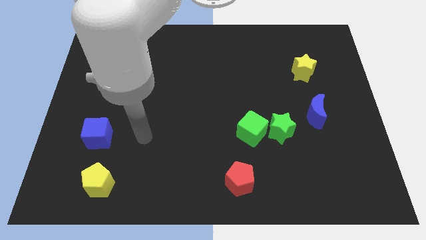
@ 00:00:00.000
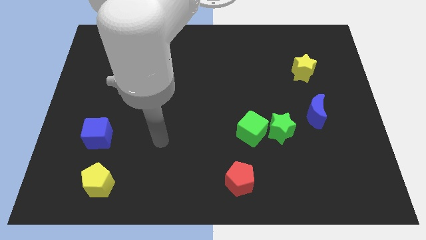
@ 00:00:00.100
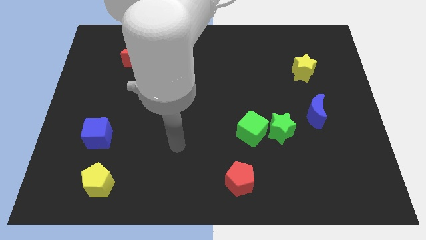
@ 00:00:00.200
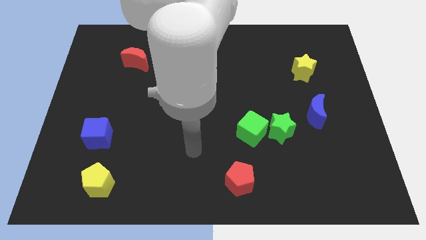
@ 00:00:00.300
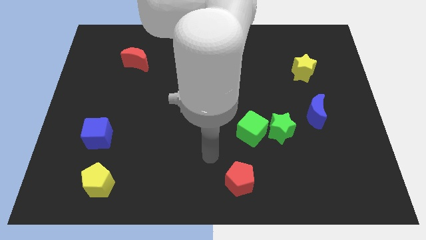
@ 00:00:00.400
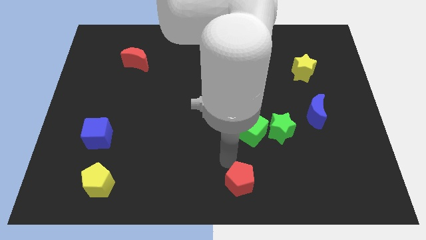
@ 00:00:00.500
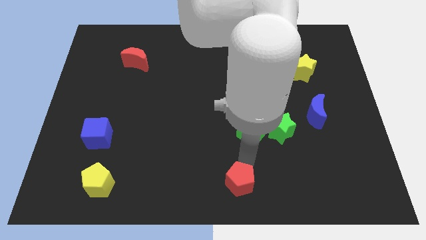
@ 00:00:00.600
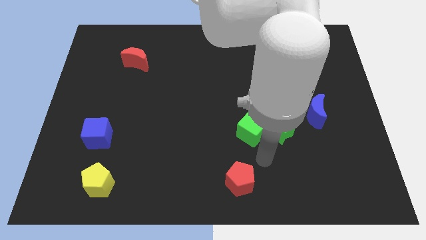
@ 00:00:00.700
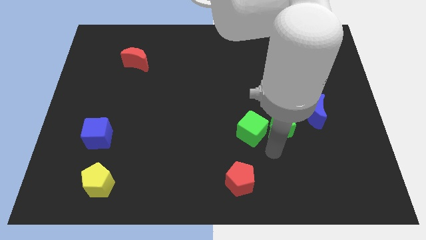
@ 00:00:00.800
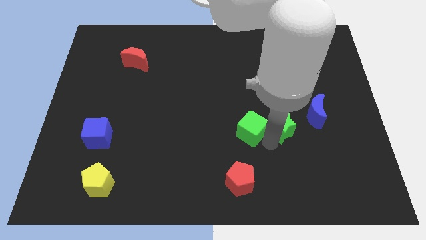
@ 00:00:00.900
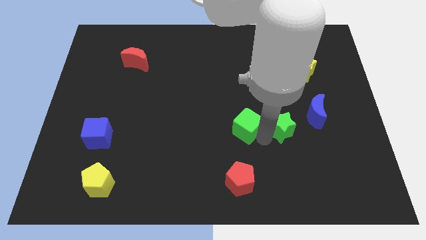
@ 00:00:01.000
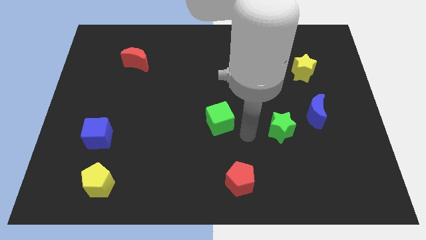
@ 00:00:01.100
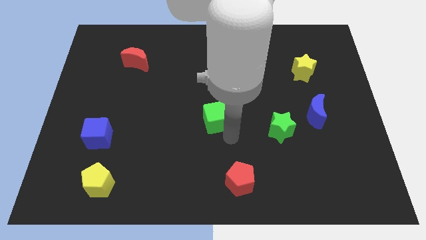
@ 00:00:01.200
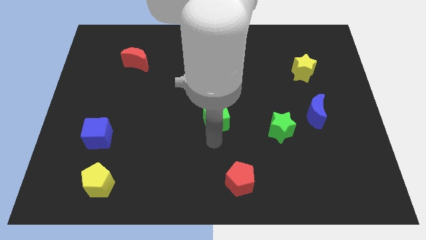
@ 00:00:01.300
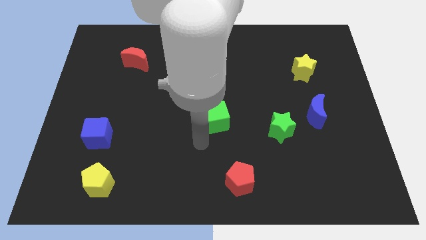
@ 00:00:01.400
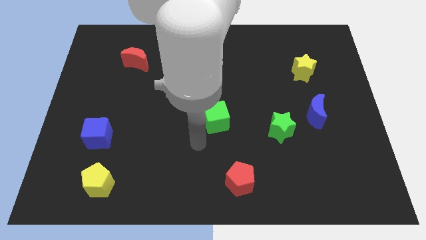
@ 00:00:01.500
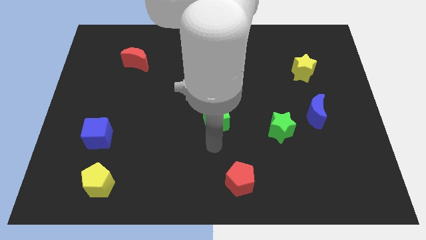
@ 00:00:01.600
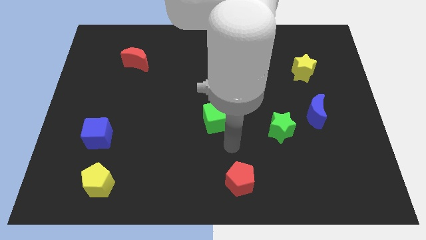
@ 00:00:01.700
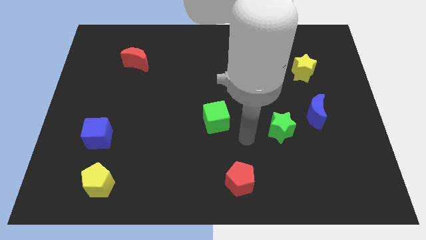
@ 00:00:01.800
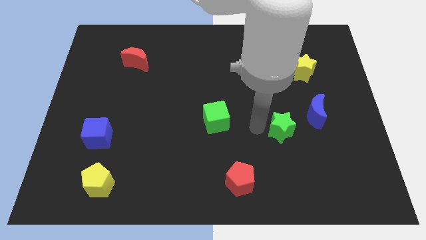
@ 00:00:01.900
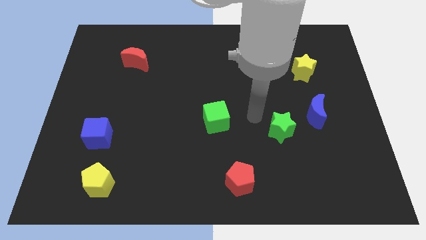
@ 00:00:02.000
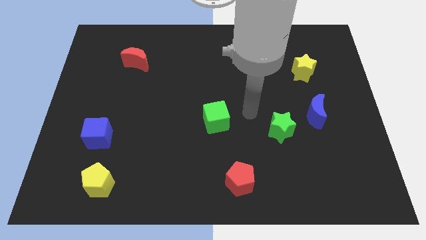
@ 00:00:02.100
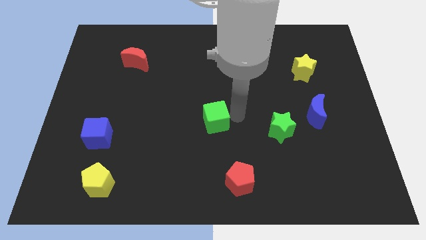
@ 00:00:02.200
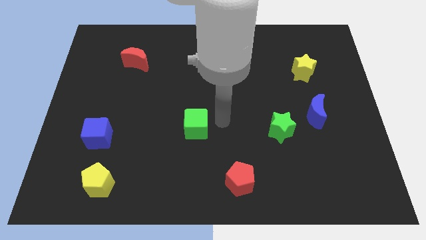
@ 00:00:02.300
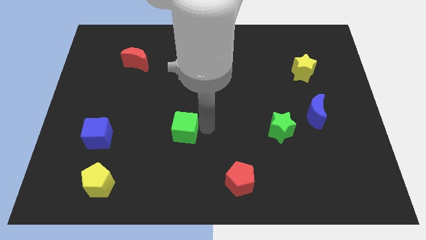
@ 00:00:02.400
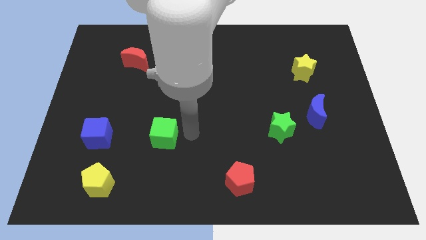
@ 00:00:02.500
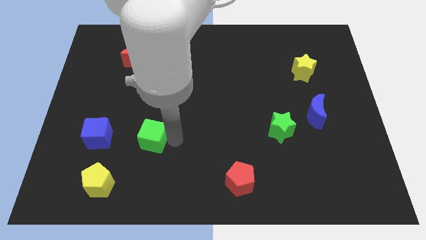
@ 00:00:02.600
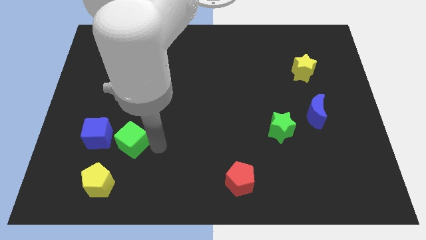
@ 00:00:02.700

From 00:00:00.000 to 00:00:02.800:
separate green cube from green star

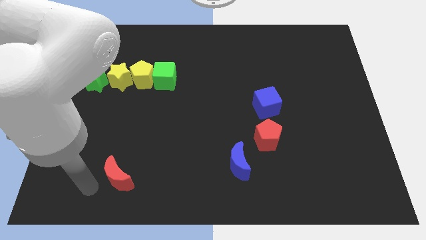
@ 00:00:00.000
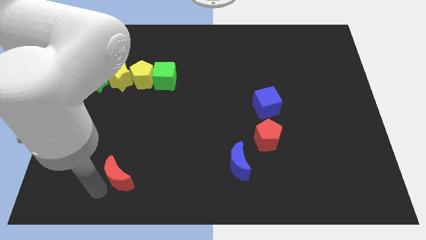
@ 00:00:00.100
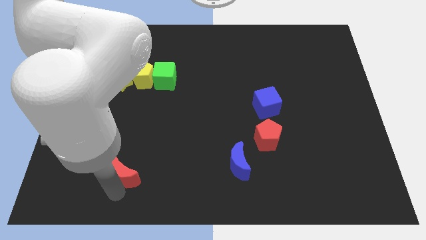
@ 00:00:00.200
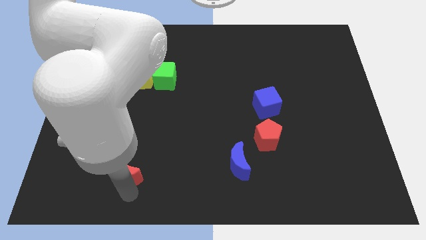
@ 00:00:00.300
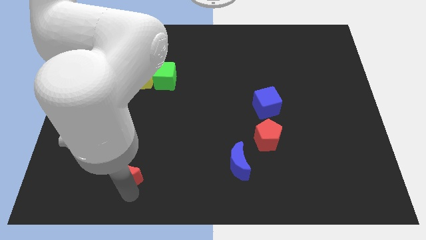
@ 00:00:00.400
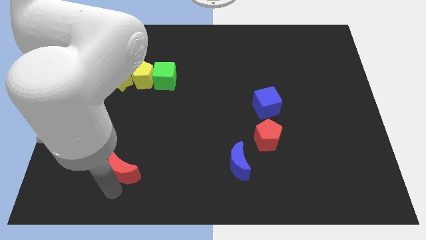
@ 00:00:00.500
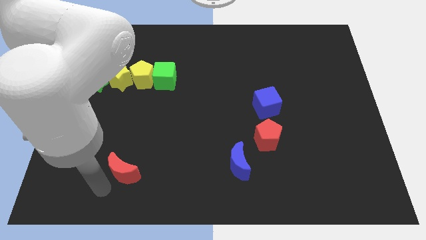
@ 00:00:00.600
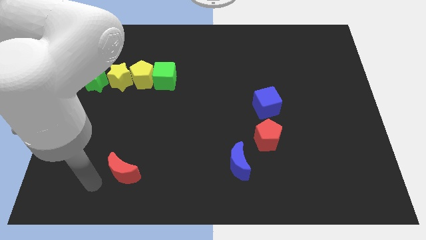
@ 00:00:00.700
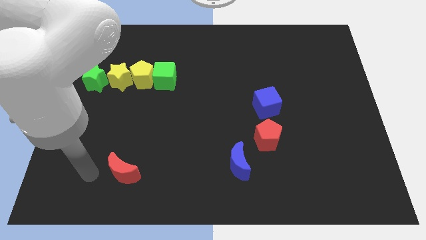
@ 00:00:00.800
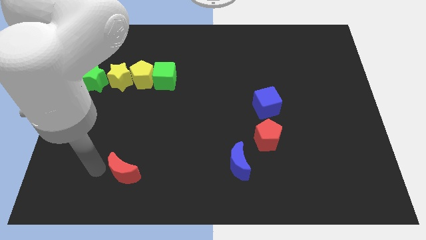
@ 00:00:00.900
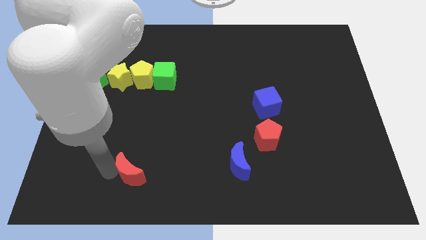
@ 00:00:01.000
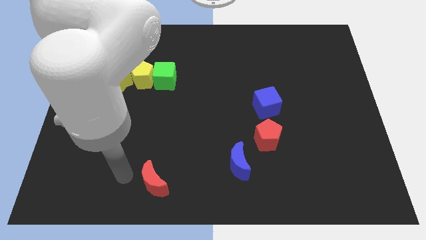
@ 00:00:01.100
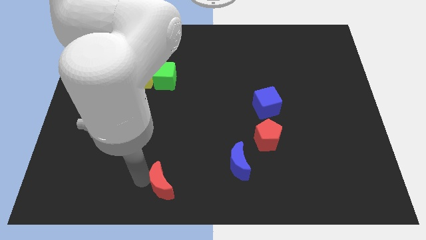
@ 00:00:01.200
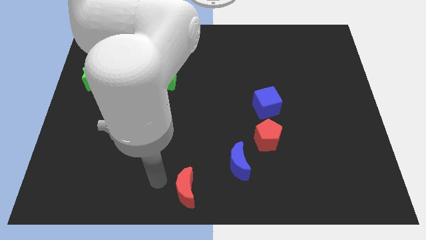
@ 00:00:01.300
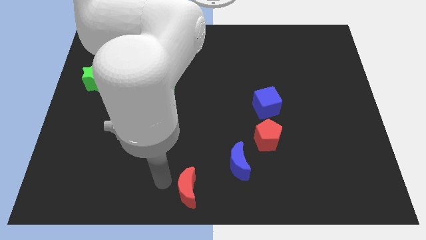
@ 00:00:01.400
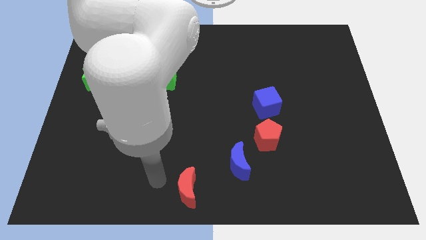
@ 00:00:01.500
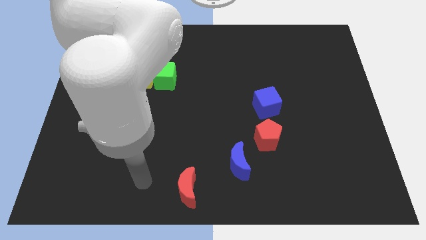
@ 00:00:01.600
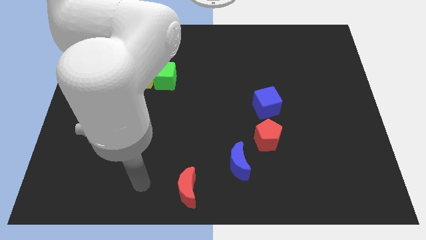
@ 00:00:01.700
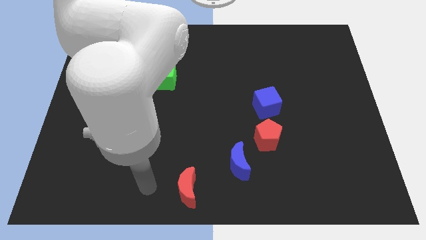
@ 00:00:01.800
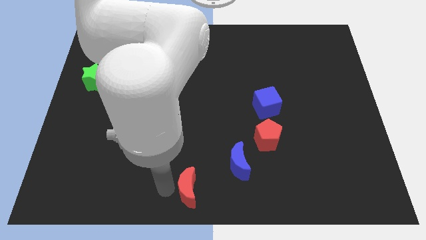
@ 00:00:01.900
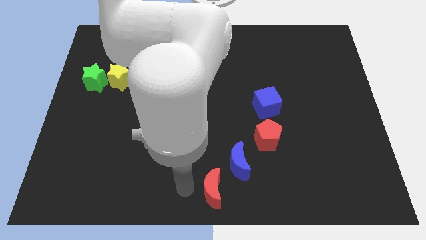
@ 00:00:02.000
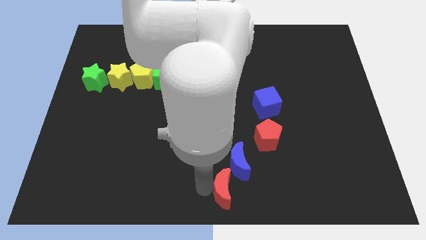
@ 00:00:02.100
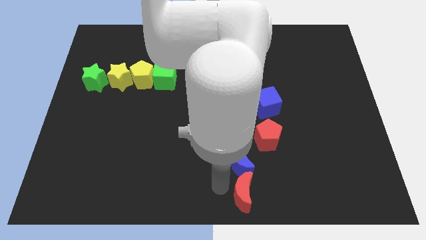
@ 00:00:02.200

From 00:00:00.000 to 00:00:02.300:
push the red moon near to the blue moon

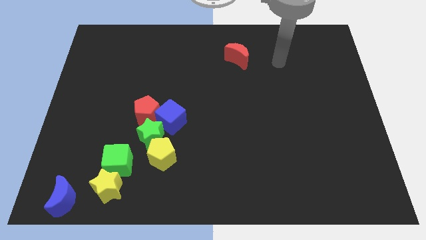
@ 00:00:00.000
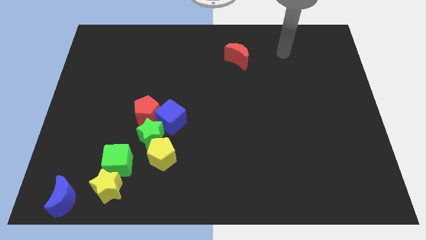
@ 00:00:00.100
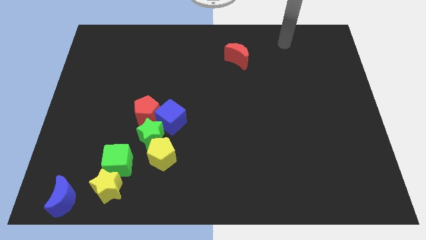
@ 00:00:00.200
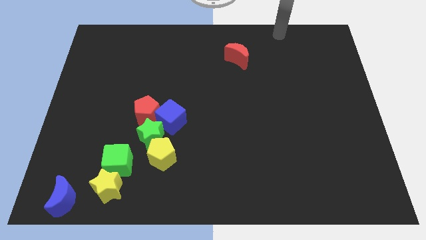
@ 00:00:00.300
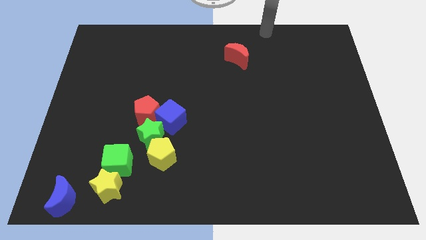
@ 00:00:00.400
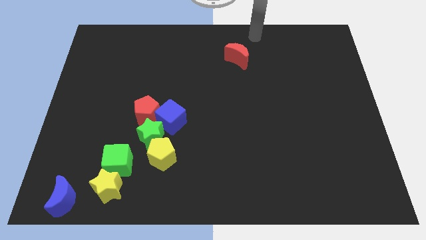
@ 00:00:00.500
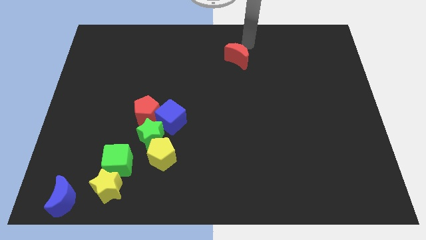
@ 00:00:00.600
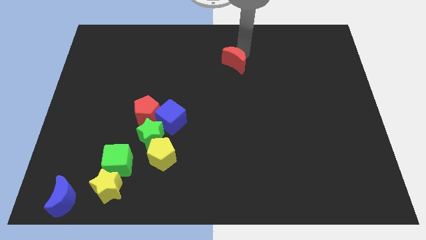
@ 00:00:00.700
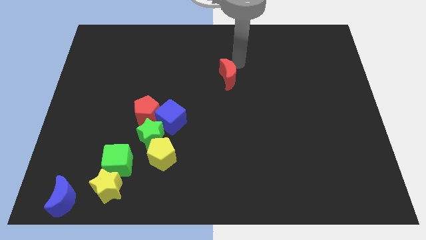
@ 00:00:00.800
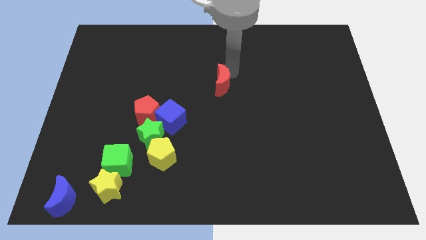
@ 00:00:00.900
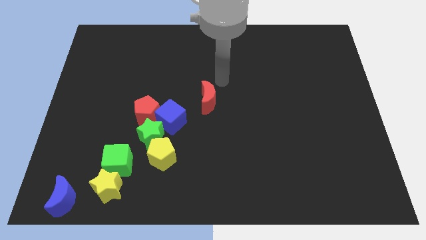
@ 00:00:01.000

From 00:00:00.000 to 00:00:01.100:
push the red crescent towards the group of blocks

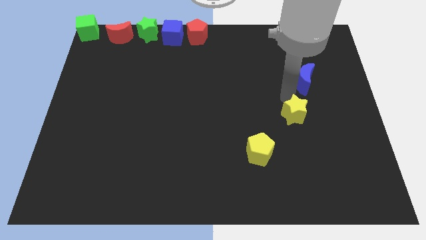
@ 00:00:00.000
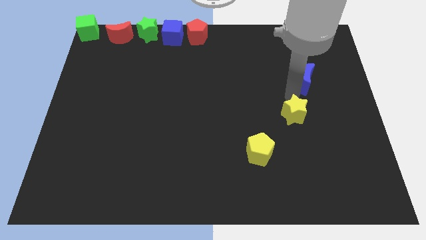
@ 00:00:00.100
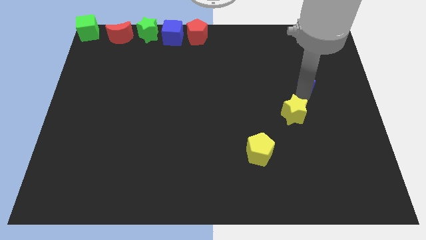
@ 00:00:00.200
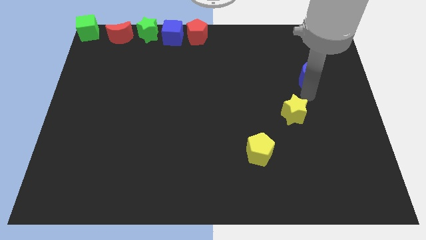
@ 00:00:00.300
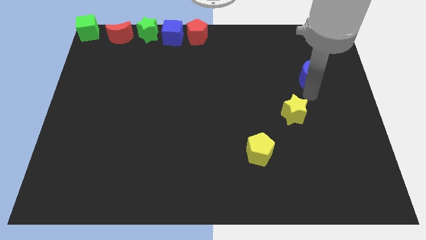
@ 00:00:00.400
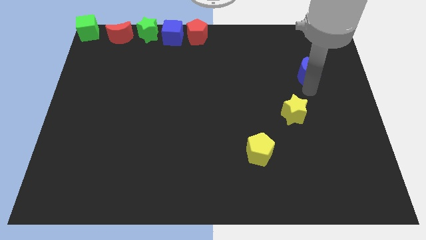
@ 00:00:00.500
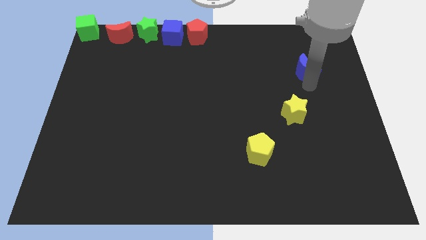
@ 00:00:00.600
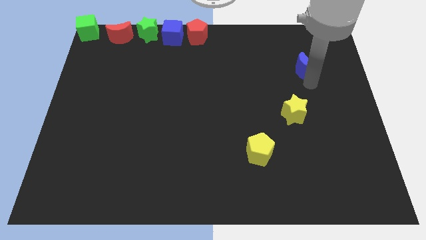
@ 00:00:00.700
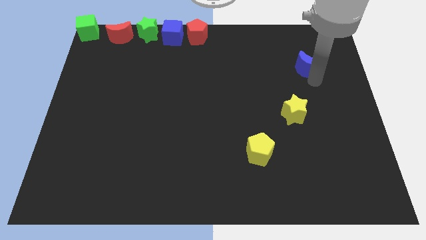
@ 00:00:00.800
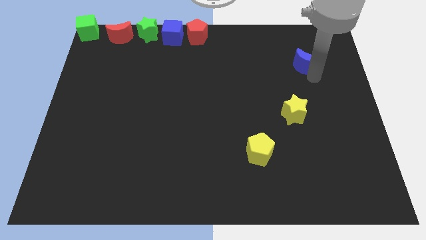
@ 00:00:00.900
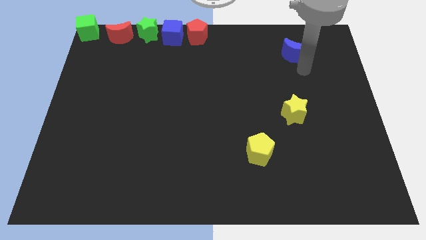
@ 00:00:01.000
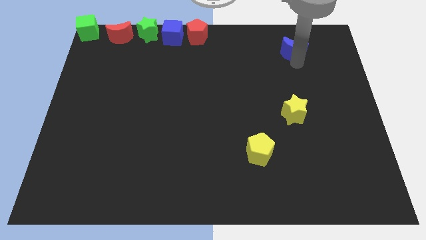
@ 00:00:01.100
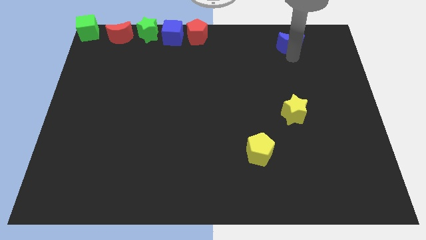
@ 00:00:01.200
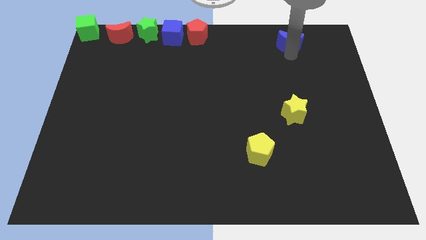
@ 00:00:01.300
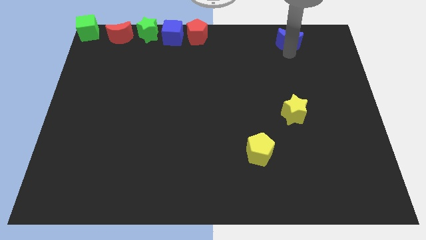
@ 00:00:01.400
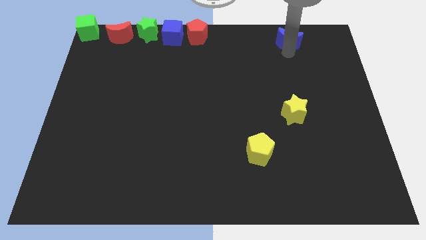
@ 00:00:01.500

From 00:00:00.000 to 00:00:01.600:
move the blue moon vertically at the top side of the yellow star

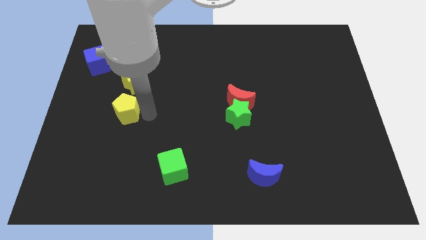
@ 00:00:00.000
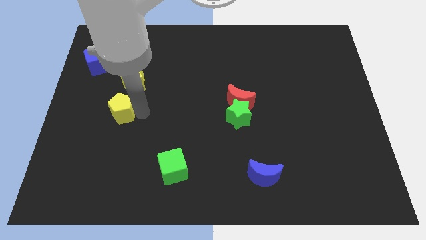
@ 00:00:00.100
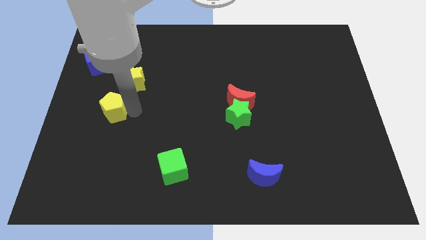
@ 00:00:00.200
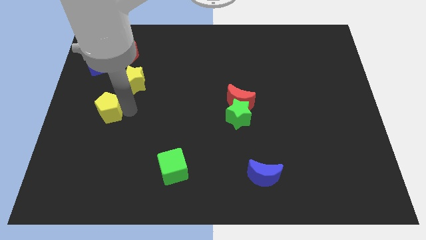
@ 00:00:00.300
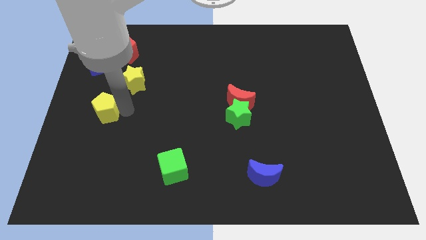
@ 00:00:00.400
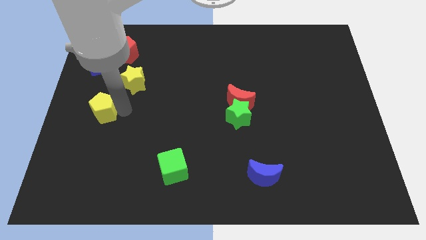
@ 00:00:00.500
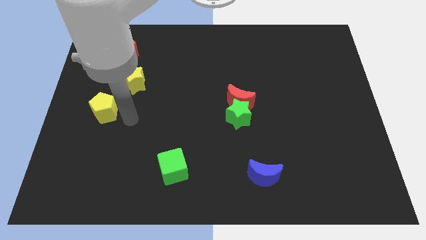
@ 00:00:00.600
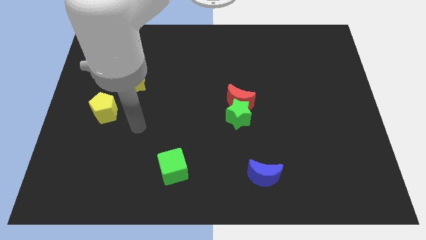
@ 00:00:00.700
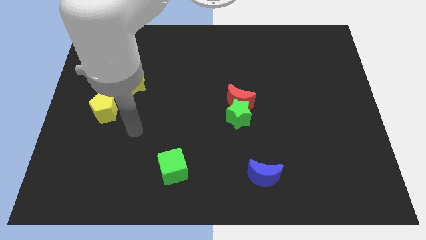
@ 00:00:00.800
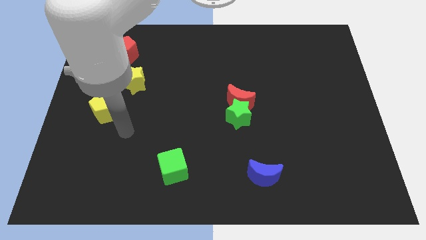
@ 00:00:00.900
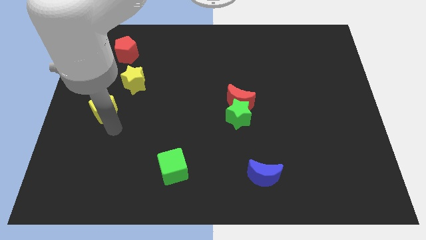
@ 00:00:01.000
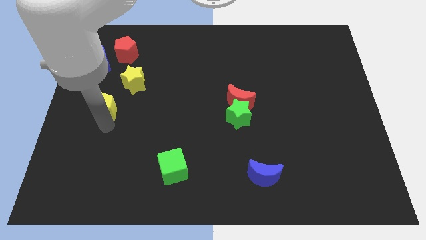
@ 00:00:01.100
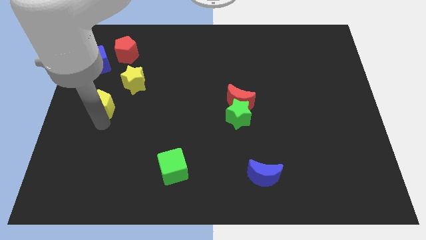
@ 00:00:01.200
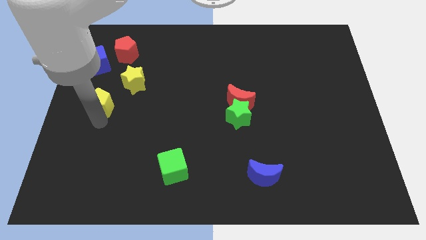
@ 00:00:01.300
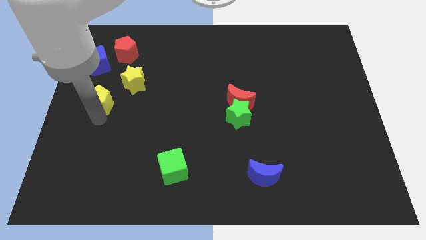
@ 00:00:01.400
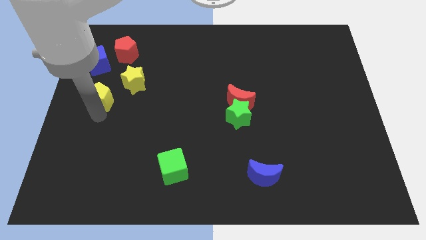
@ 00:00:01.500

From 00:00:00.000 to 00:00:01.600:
place the yellow pentagon at the bottom of the blue cube
